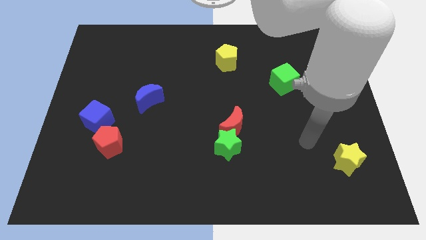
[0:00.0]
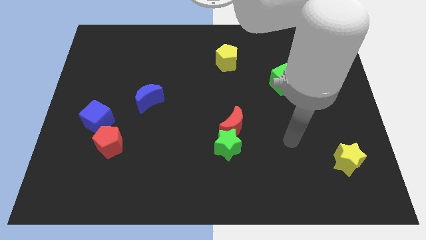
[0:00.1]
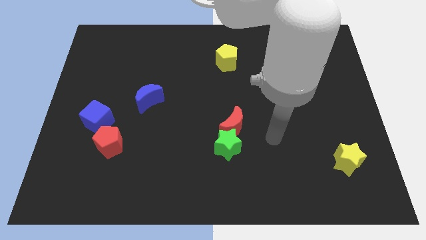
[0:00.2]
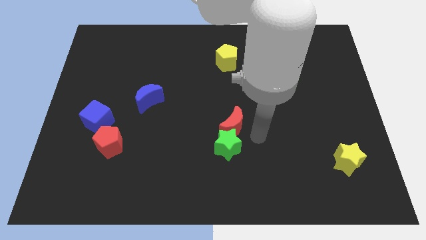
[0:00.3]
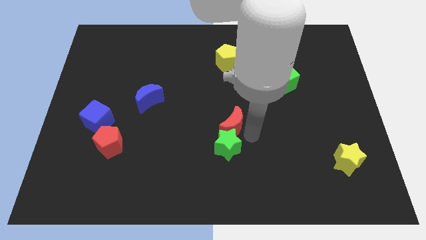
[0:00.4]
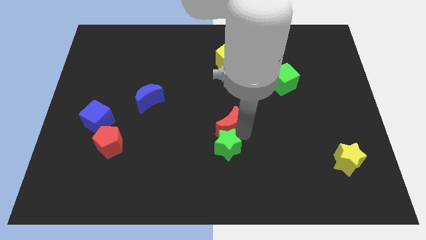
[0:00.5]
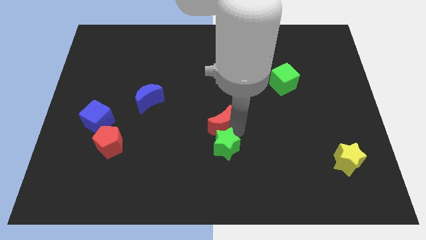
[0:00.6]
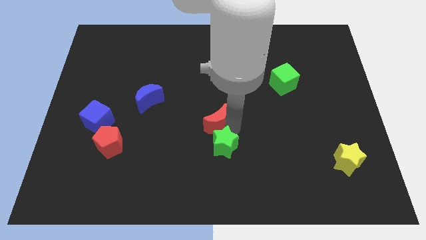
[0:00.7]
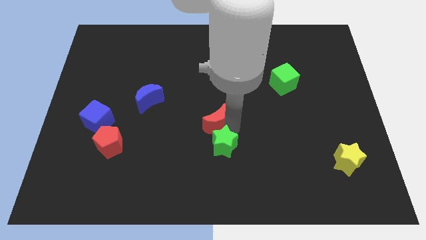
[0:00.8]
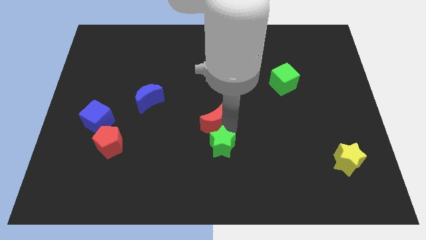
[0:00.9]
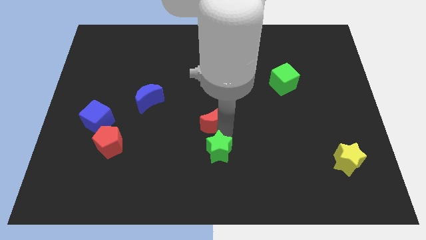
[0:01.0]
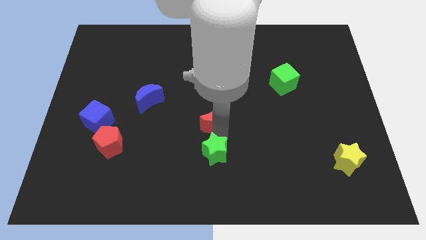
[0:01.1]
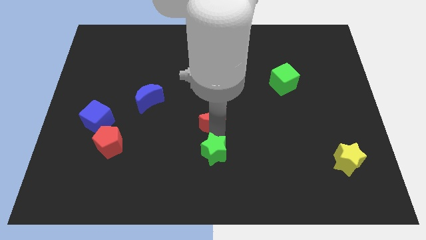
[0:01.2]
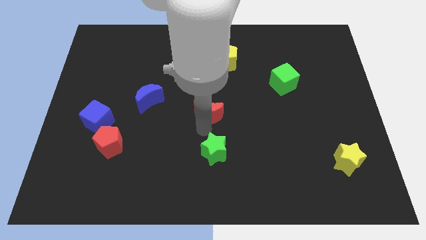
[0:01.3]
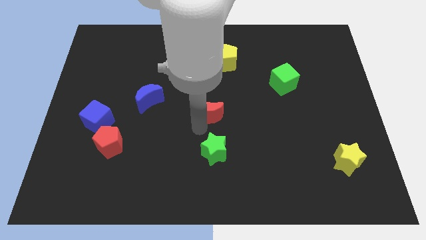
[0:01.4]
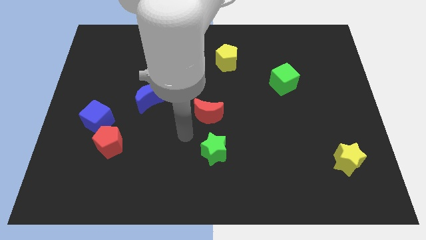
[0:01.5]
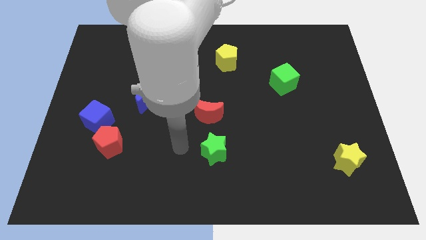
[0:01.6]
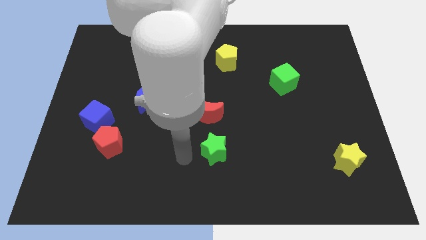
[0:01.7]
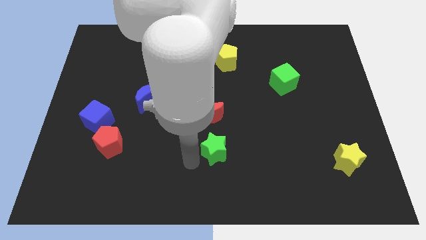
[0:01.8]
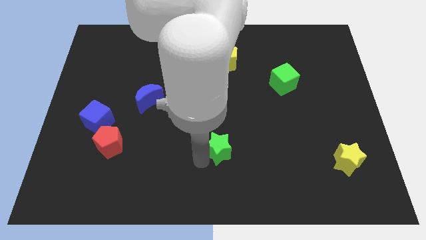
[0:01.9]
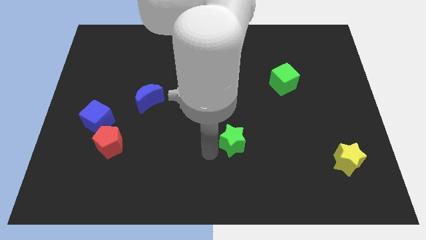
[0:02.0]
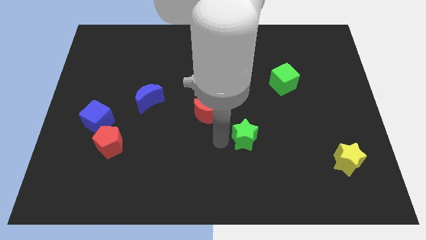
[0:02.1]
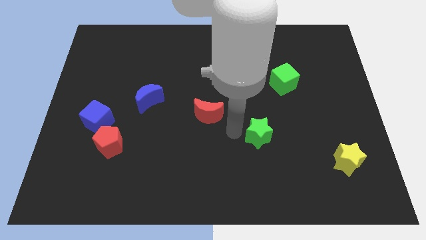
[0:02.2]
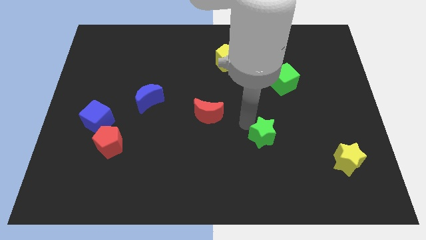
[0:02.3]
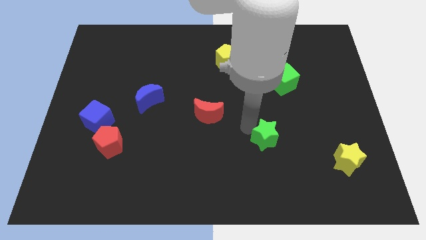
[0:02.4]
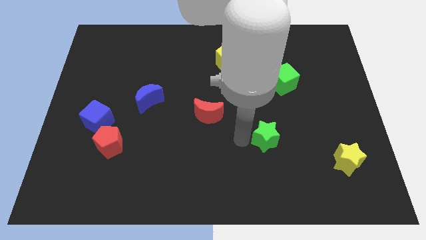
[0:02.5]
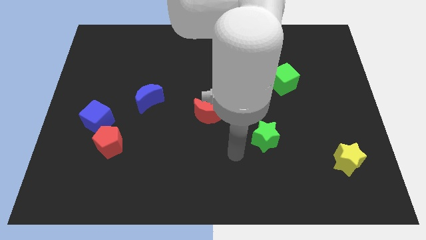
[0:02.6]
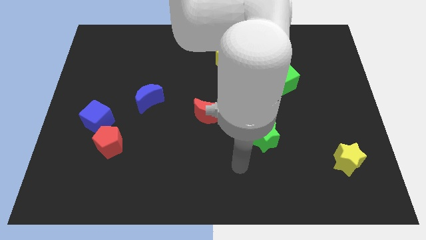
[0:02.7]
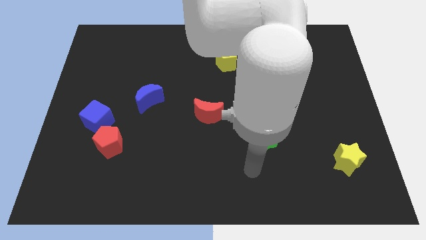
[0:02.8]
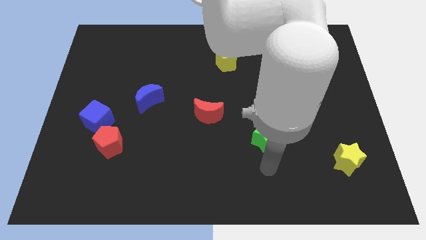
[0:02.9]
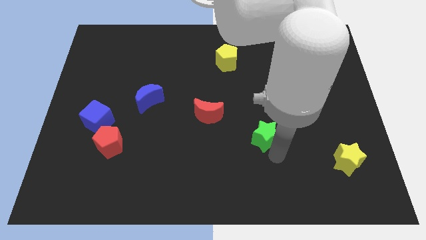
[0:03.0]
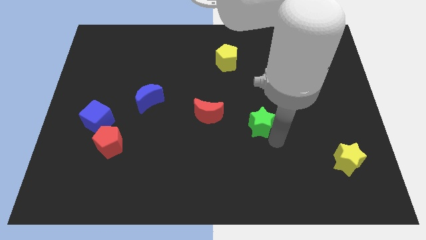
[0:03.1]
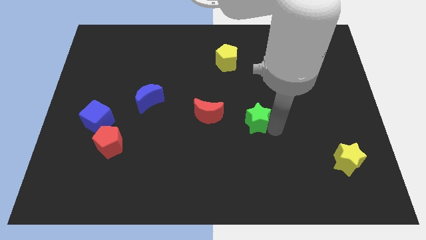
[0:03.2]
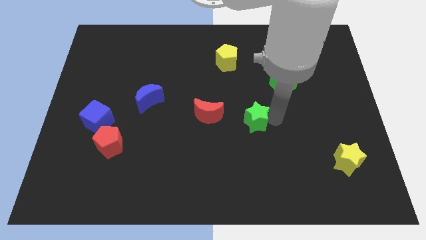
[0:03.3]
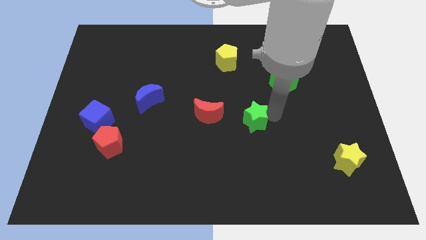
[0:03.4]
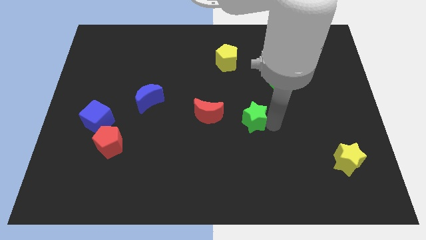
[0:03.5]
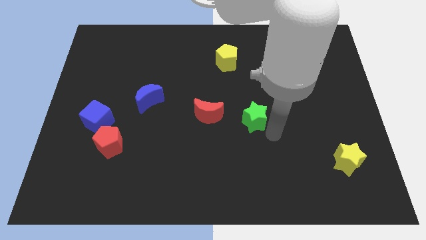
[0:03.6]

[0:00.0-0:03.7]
place the green star right to the red moon

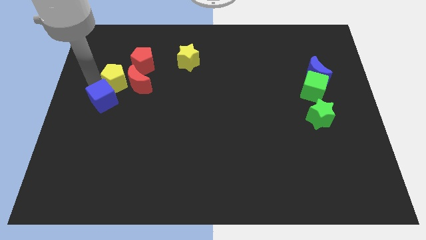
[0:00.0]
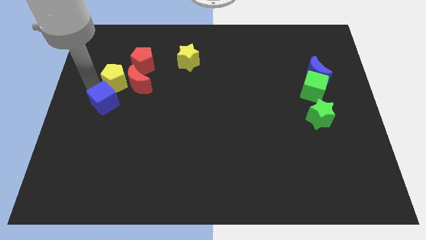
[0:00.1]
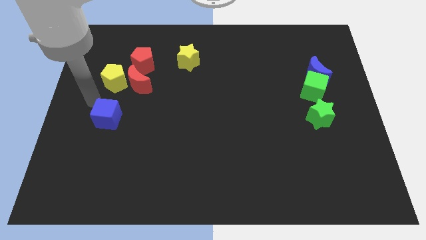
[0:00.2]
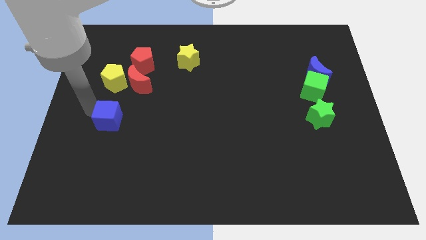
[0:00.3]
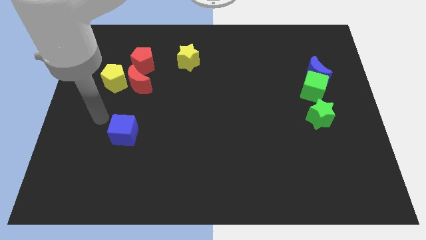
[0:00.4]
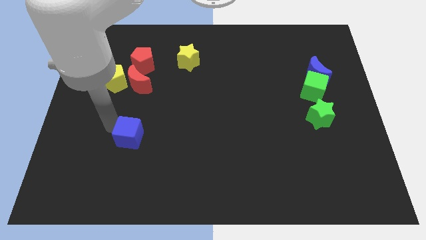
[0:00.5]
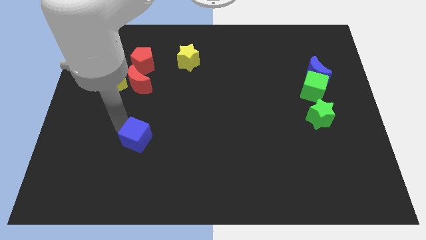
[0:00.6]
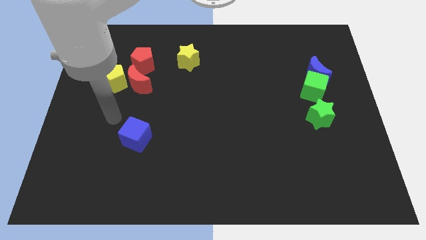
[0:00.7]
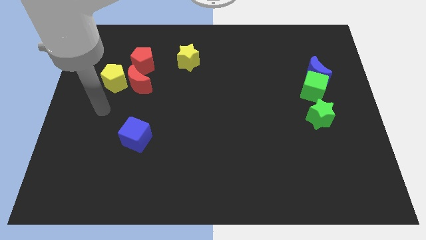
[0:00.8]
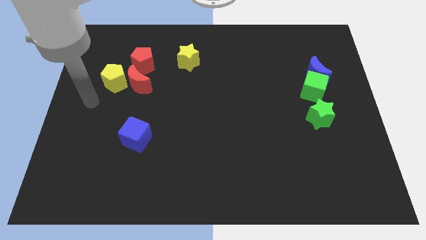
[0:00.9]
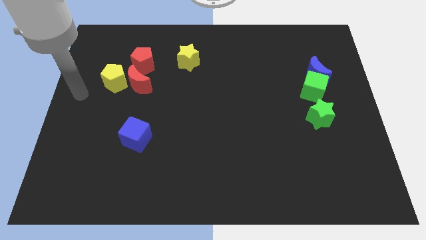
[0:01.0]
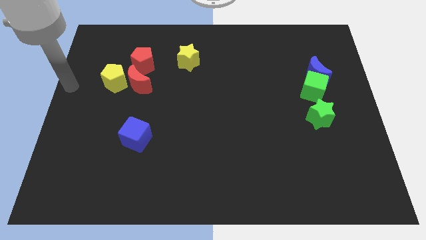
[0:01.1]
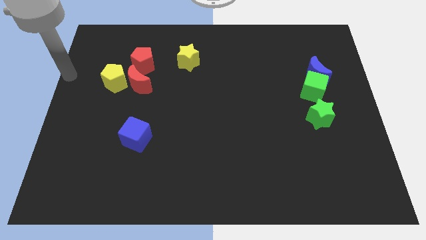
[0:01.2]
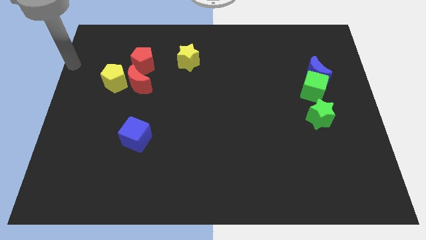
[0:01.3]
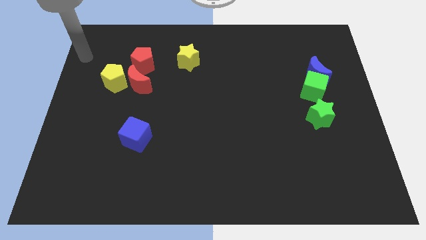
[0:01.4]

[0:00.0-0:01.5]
separate blue cube from yellow pentagon

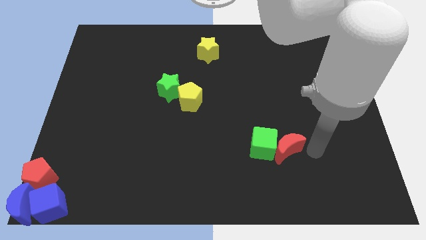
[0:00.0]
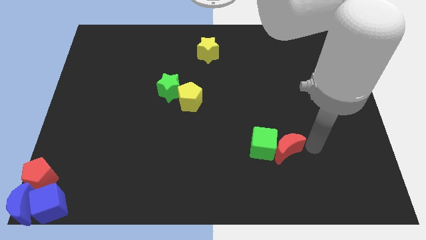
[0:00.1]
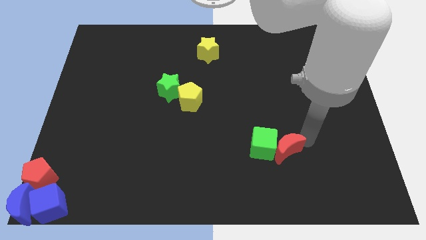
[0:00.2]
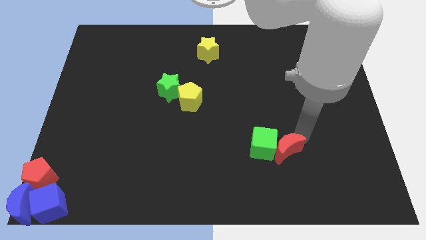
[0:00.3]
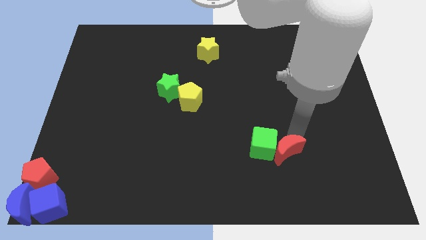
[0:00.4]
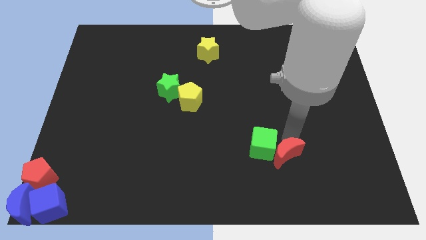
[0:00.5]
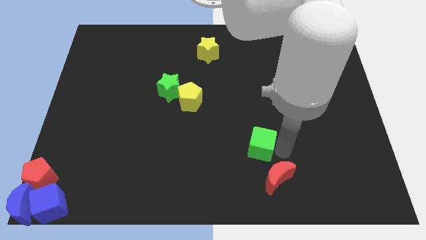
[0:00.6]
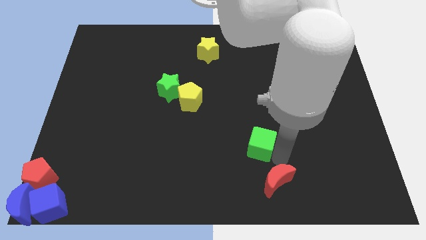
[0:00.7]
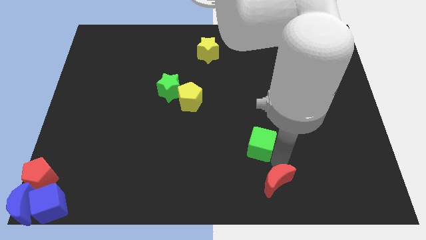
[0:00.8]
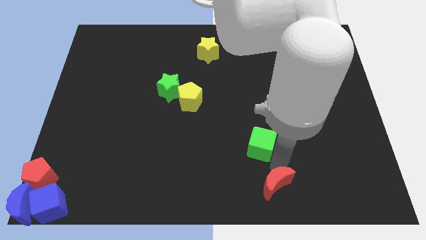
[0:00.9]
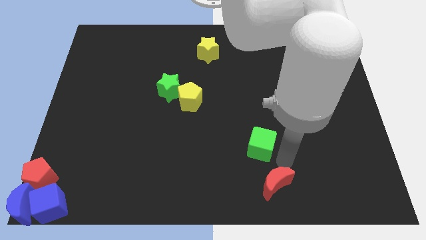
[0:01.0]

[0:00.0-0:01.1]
push the red crescent away from green cube

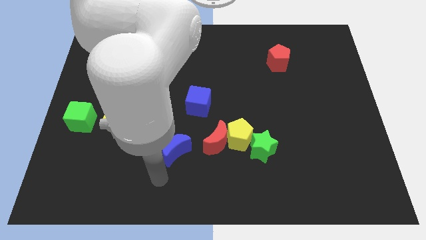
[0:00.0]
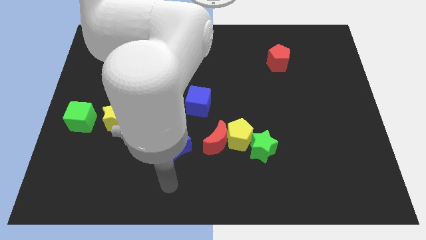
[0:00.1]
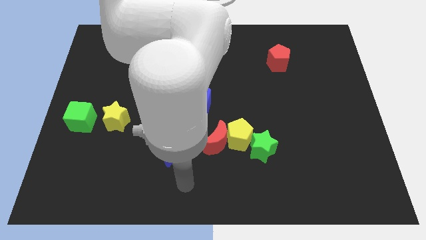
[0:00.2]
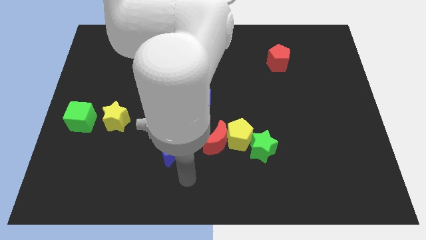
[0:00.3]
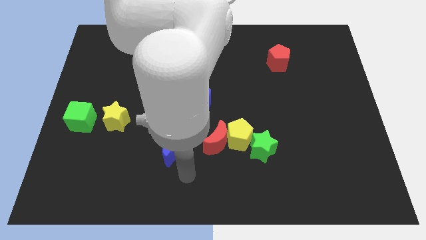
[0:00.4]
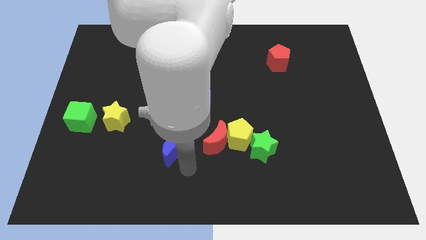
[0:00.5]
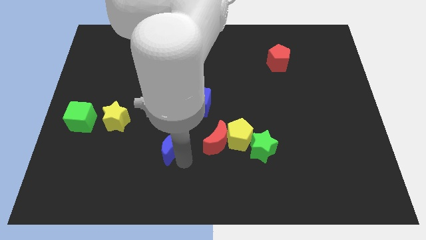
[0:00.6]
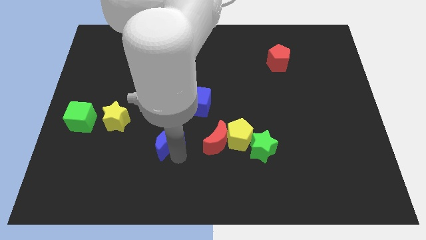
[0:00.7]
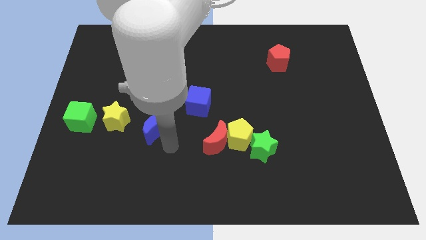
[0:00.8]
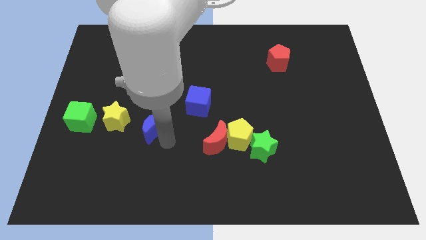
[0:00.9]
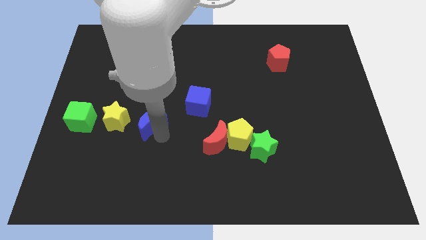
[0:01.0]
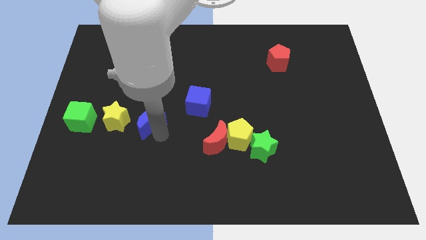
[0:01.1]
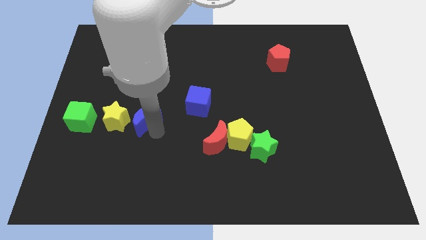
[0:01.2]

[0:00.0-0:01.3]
push blue crescent beside yellow star

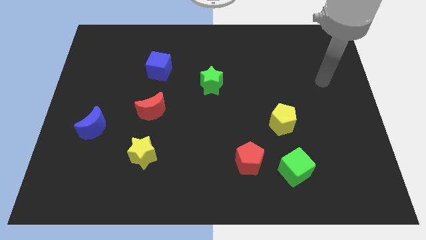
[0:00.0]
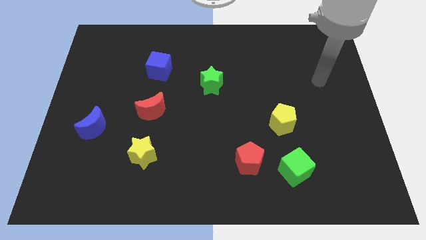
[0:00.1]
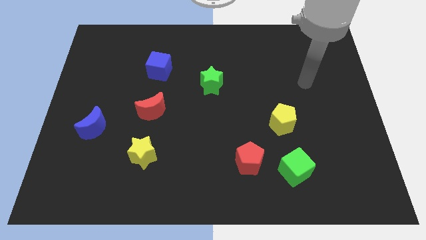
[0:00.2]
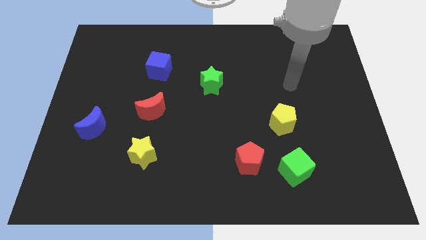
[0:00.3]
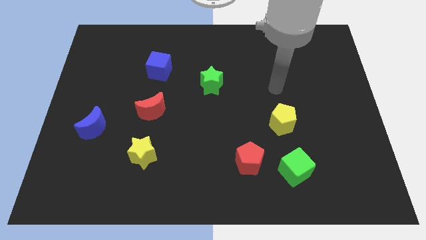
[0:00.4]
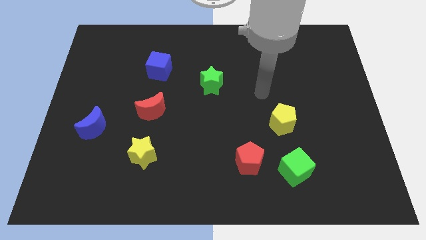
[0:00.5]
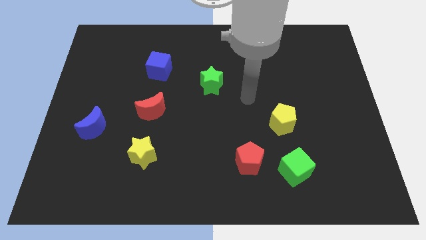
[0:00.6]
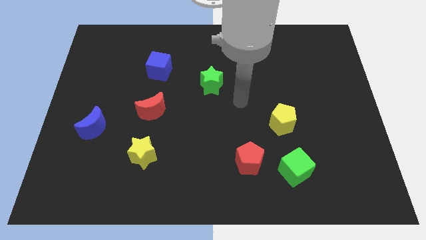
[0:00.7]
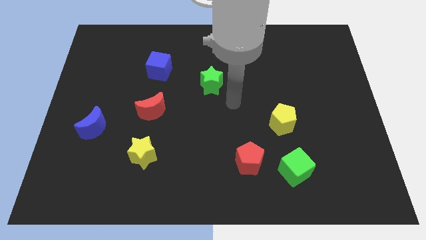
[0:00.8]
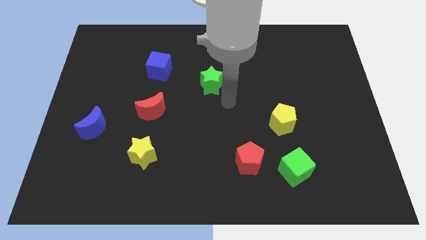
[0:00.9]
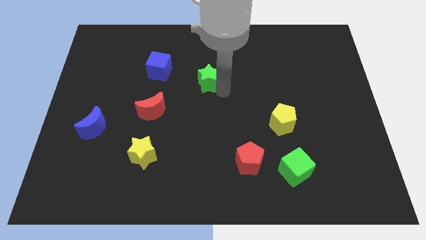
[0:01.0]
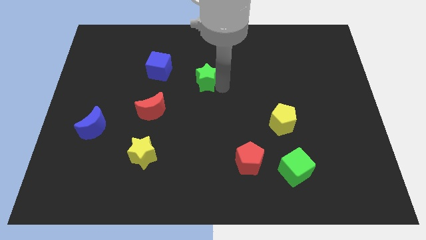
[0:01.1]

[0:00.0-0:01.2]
touch the bottom right of the green star

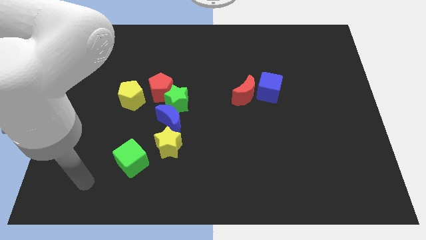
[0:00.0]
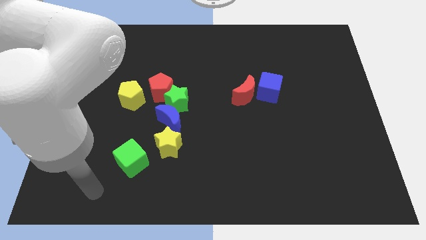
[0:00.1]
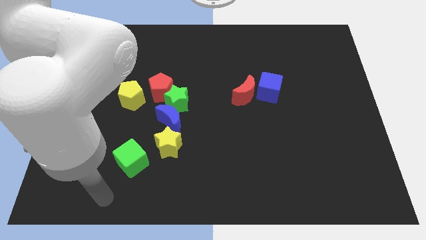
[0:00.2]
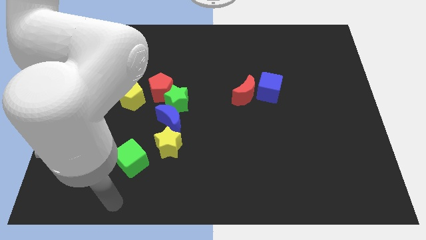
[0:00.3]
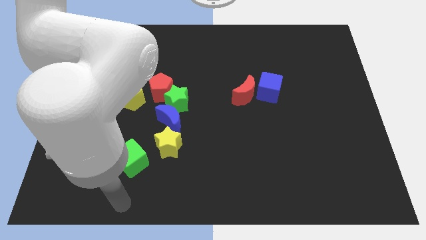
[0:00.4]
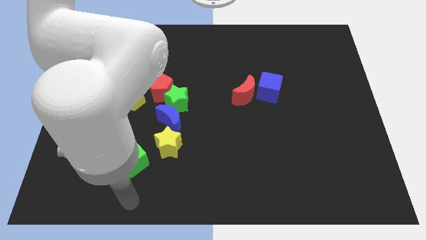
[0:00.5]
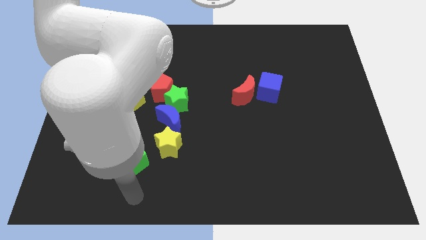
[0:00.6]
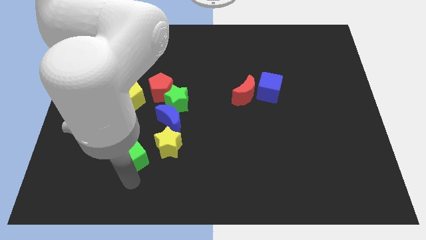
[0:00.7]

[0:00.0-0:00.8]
place the arm down to the green cube
